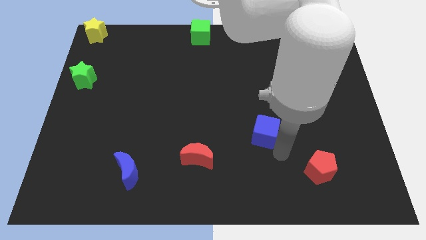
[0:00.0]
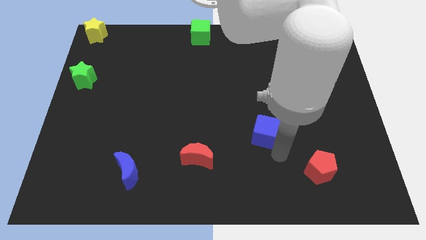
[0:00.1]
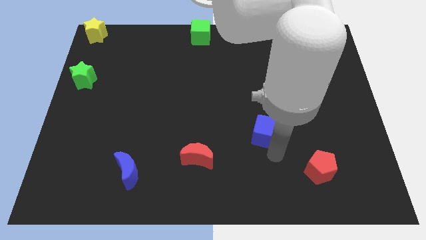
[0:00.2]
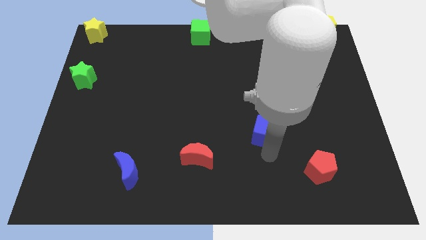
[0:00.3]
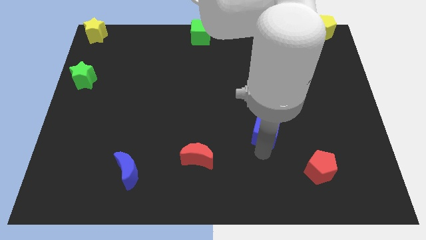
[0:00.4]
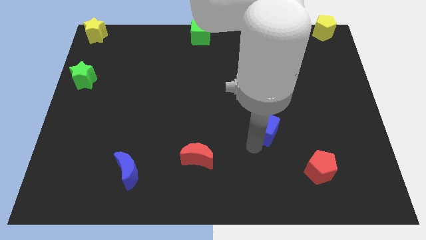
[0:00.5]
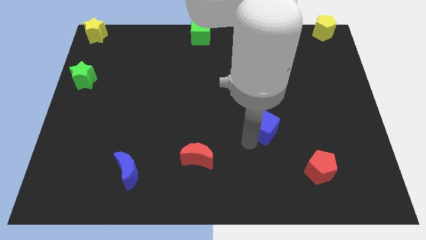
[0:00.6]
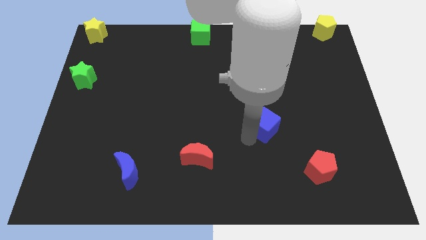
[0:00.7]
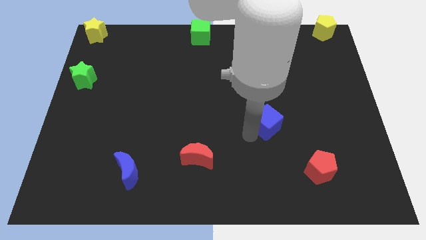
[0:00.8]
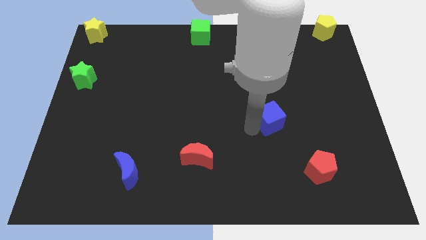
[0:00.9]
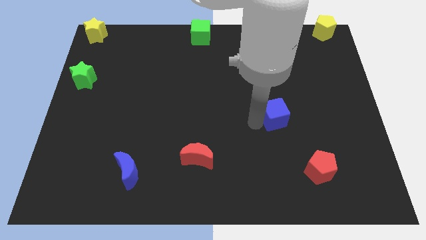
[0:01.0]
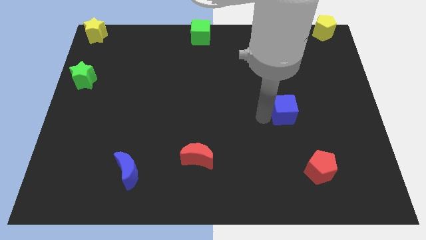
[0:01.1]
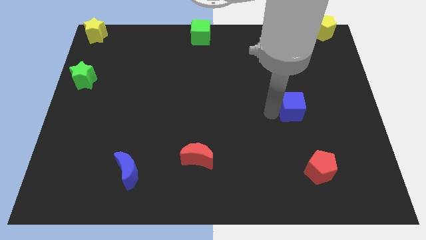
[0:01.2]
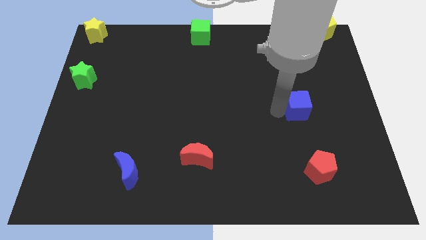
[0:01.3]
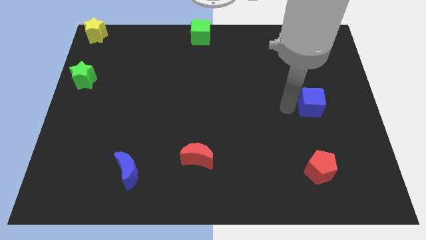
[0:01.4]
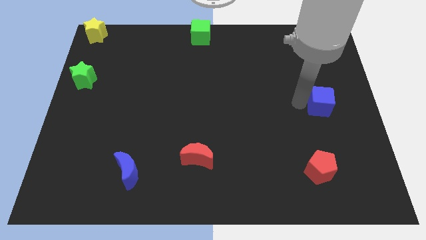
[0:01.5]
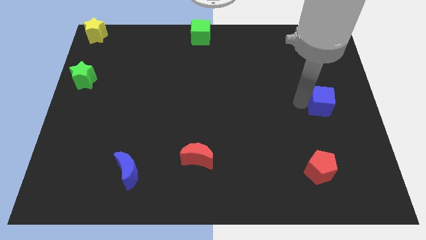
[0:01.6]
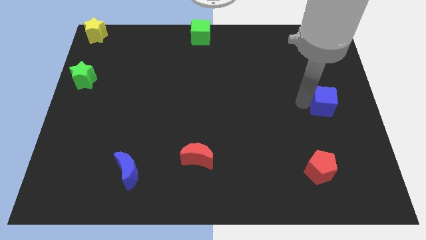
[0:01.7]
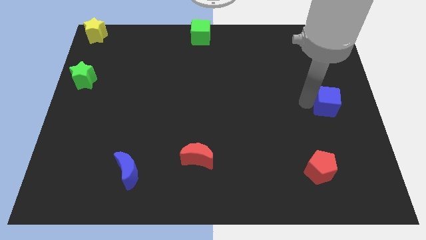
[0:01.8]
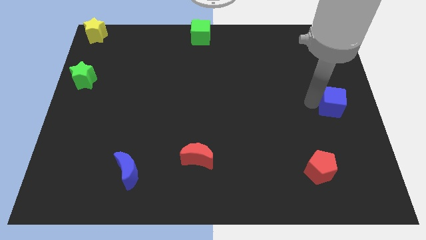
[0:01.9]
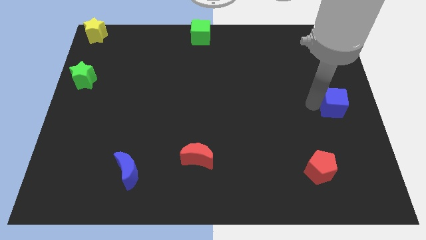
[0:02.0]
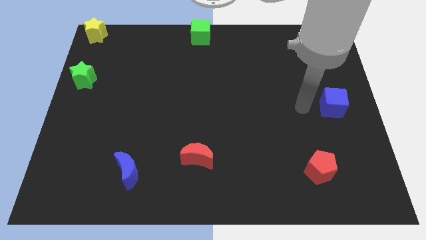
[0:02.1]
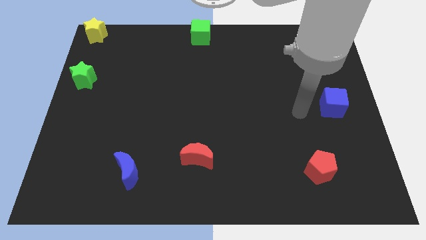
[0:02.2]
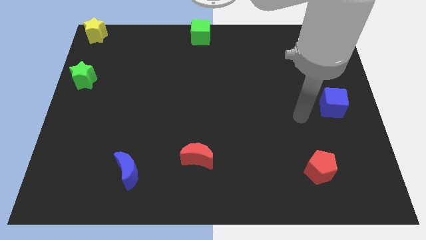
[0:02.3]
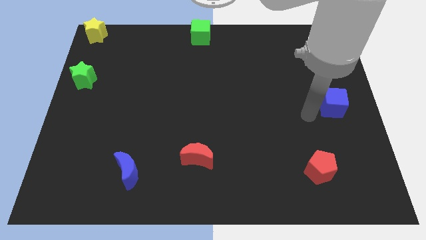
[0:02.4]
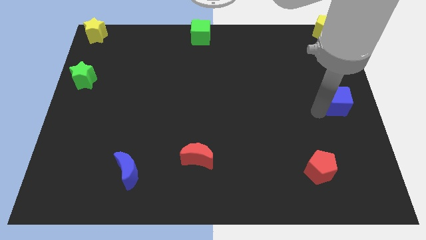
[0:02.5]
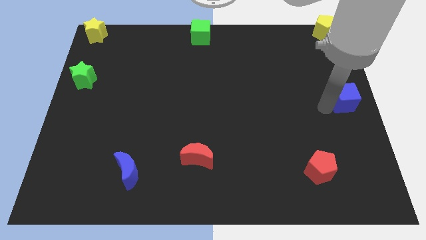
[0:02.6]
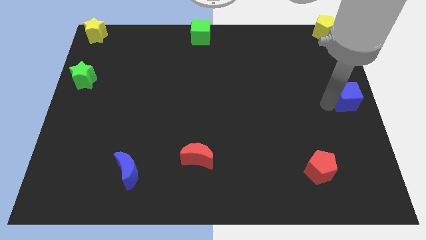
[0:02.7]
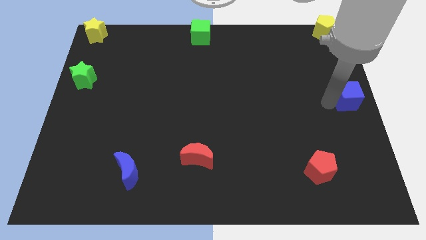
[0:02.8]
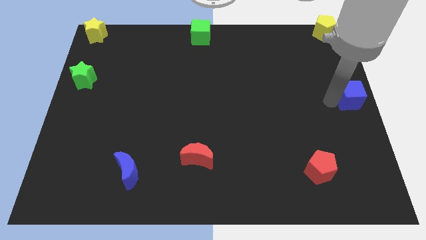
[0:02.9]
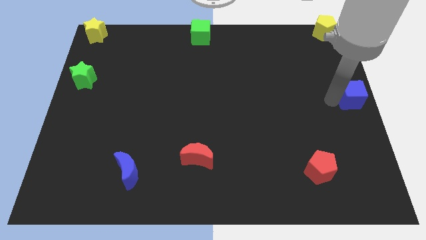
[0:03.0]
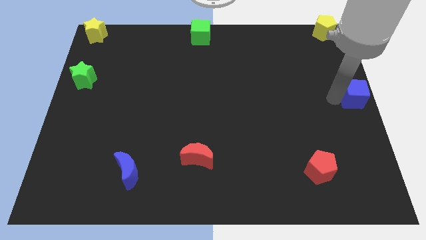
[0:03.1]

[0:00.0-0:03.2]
place the blue cube below the yellow pentagon

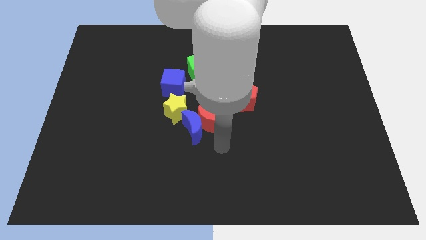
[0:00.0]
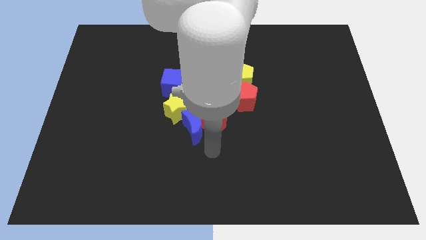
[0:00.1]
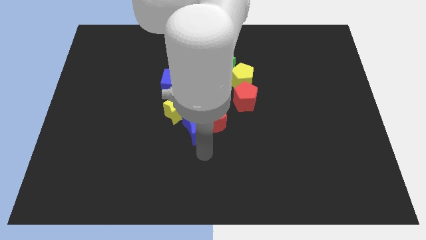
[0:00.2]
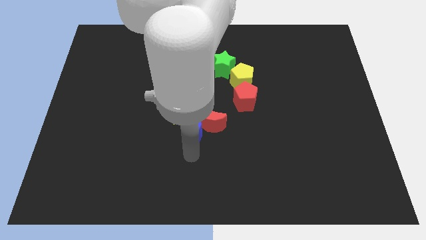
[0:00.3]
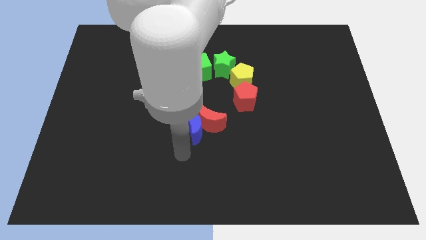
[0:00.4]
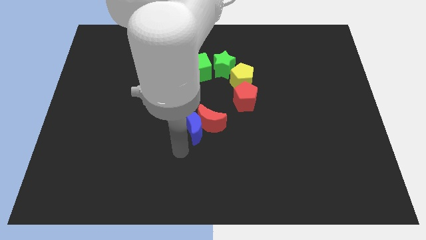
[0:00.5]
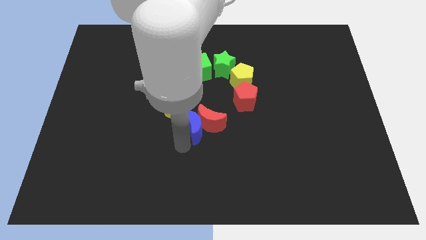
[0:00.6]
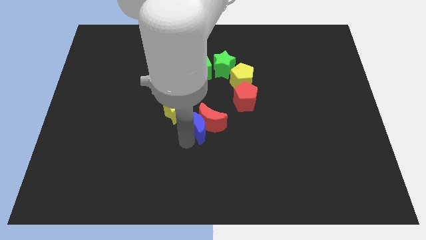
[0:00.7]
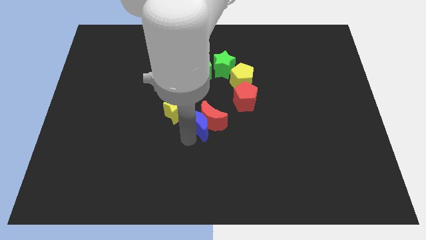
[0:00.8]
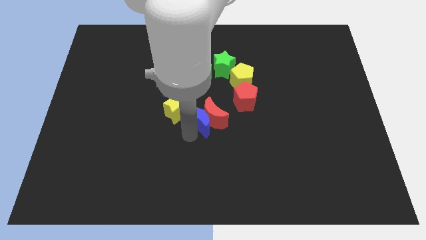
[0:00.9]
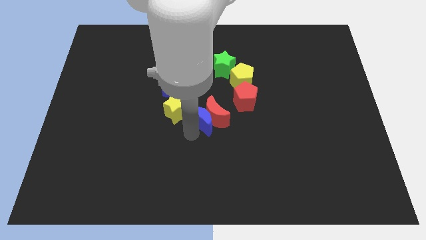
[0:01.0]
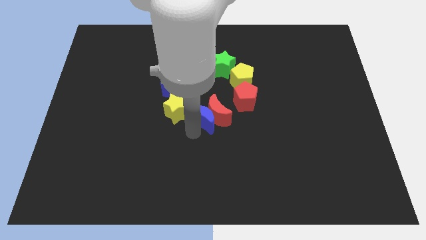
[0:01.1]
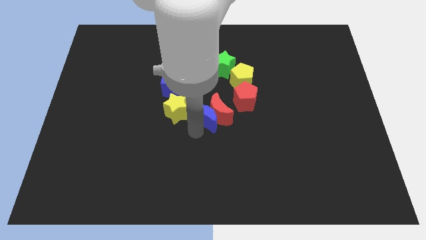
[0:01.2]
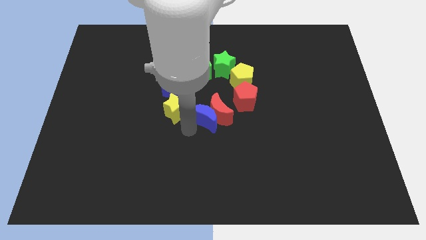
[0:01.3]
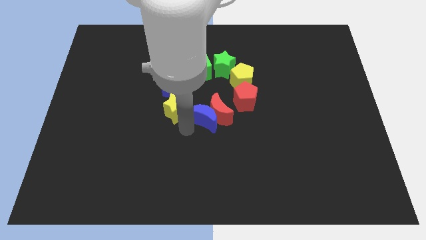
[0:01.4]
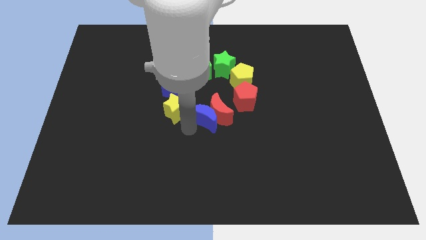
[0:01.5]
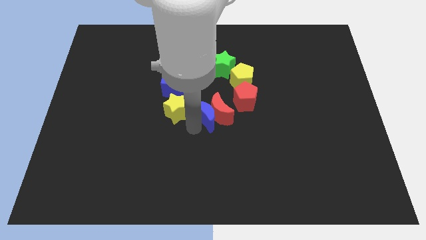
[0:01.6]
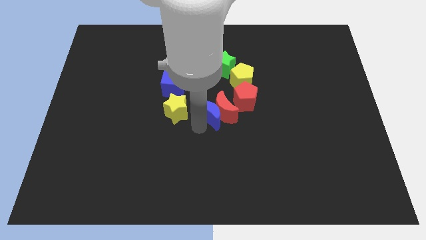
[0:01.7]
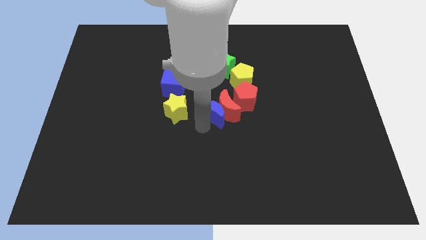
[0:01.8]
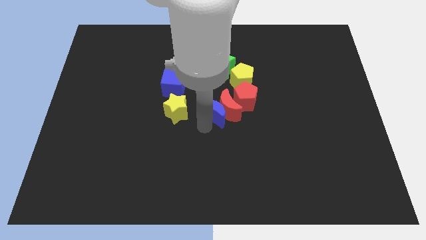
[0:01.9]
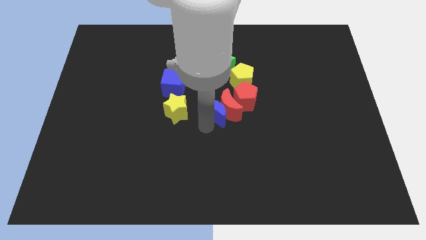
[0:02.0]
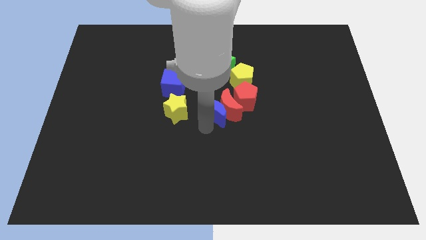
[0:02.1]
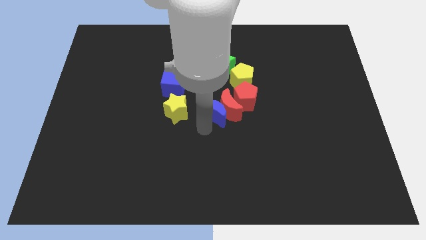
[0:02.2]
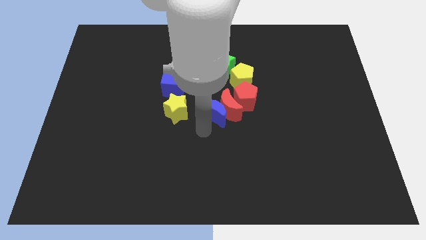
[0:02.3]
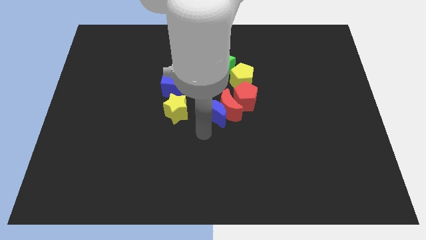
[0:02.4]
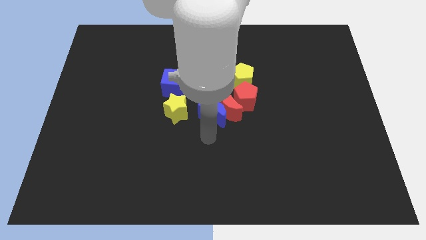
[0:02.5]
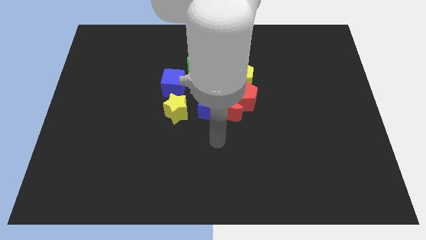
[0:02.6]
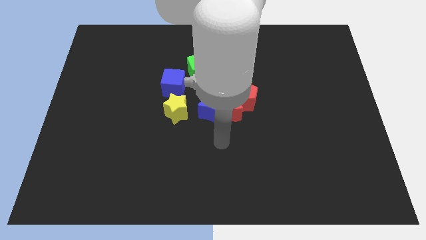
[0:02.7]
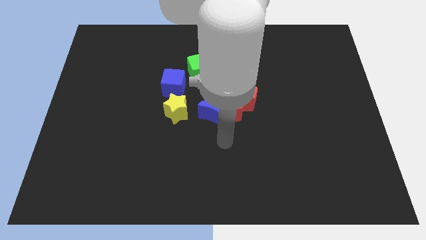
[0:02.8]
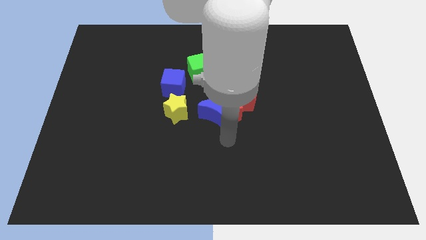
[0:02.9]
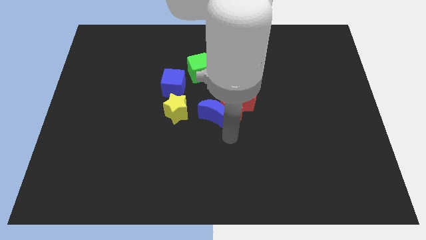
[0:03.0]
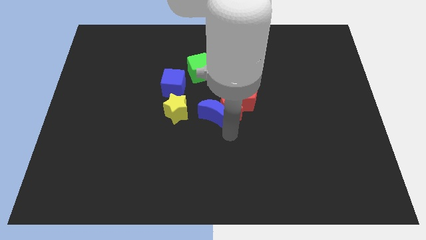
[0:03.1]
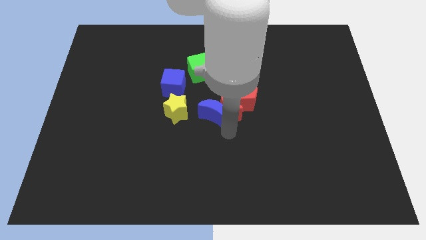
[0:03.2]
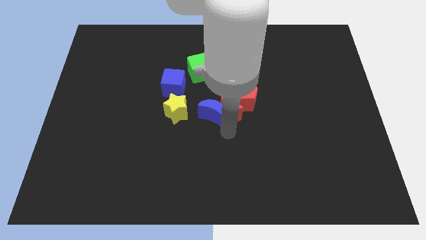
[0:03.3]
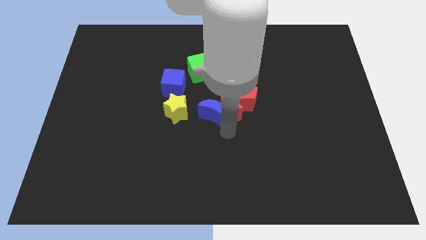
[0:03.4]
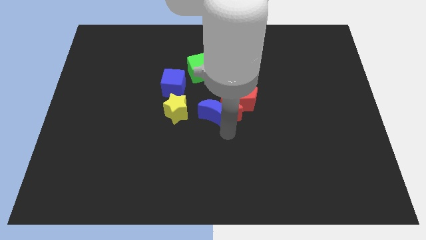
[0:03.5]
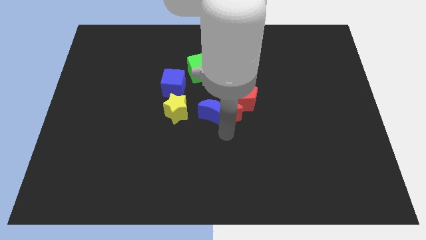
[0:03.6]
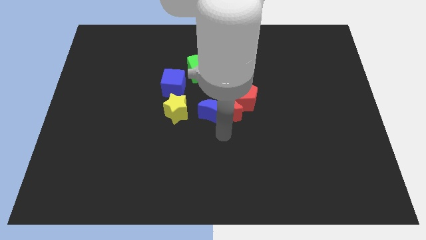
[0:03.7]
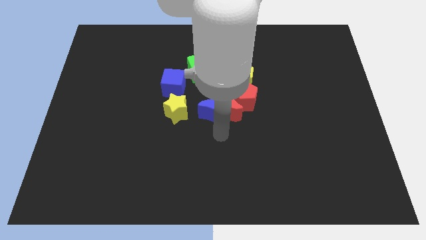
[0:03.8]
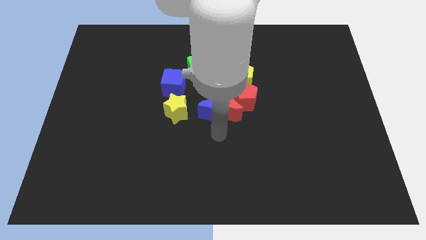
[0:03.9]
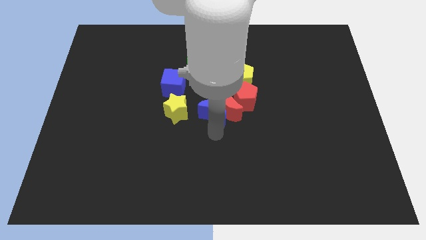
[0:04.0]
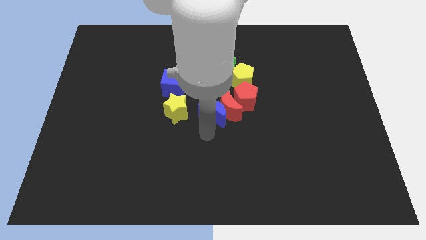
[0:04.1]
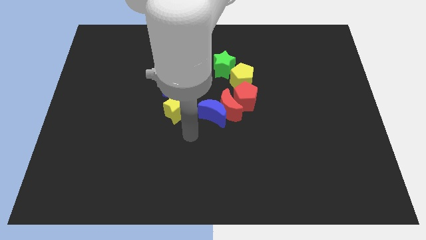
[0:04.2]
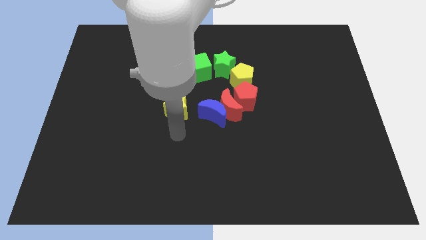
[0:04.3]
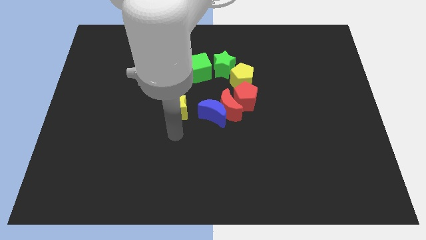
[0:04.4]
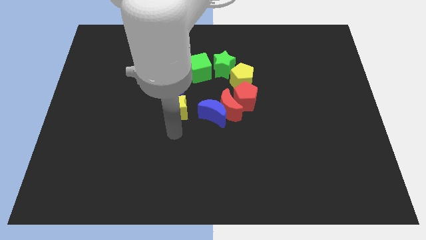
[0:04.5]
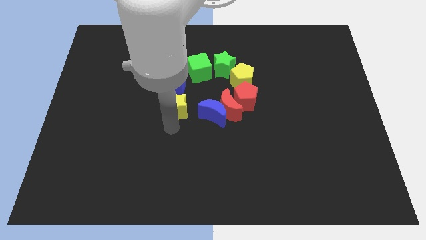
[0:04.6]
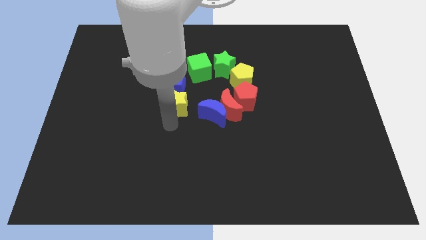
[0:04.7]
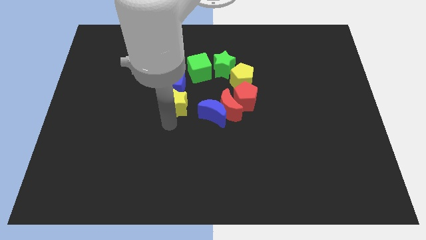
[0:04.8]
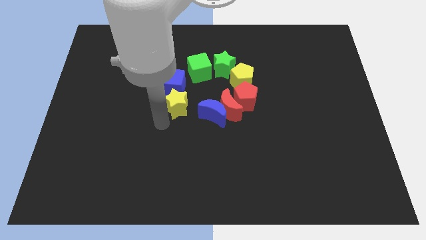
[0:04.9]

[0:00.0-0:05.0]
push the red crescent with the blue crescent towards bottom left of the red pentagon

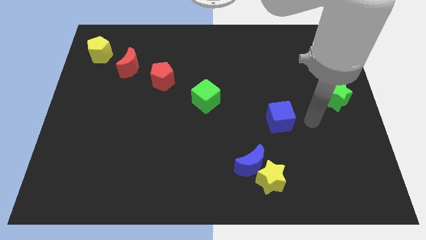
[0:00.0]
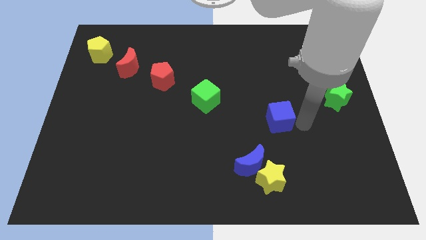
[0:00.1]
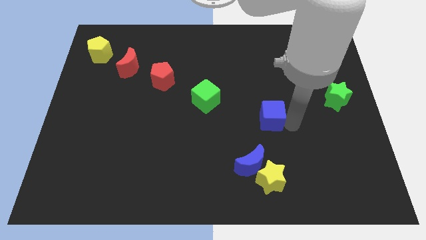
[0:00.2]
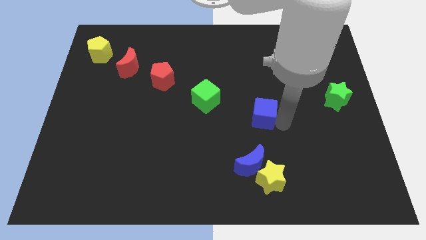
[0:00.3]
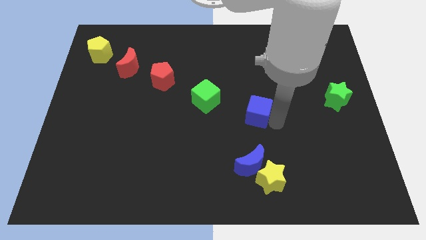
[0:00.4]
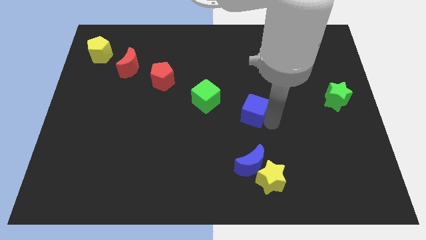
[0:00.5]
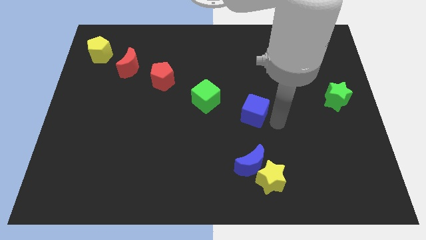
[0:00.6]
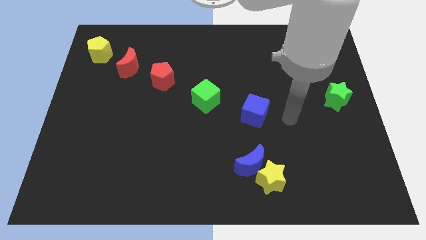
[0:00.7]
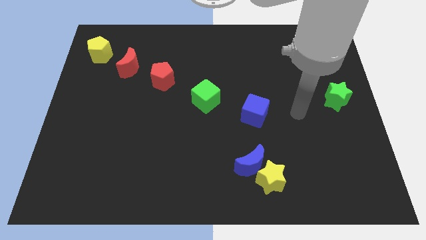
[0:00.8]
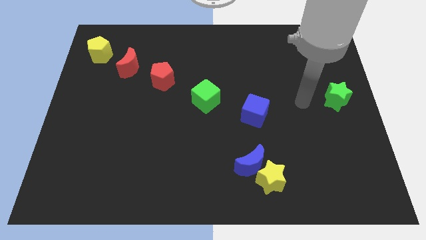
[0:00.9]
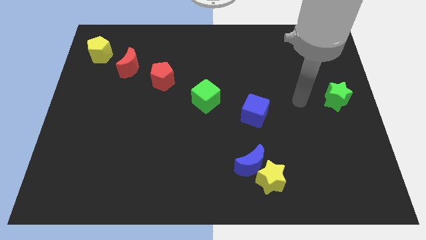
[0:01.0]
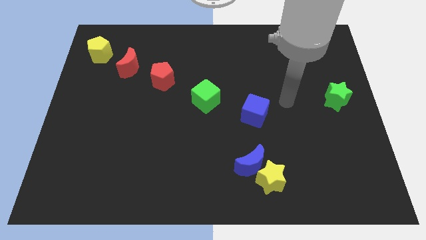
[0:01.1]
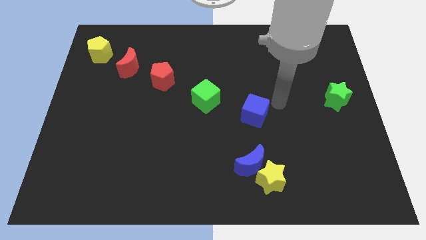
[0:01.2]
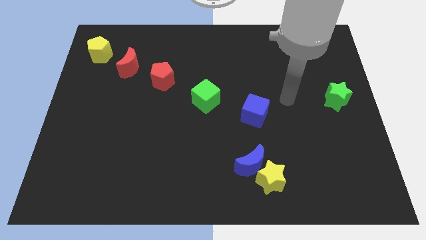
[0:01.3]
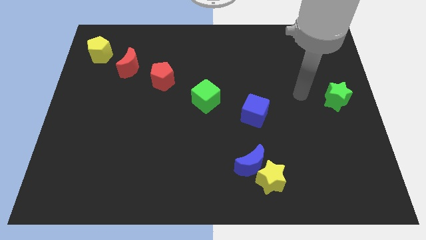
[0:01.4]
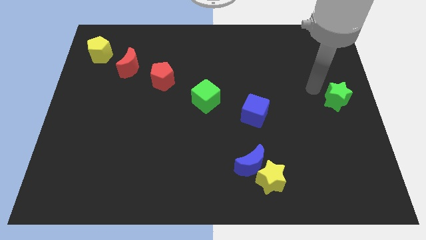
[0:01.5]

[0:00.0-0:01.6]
slightly push blue cube towards left
